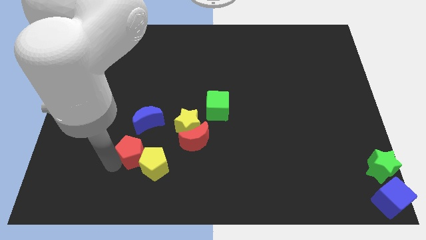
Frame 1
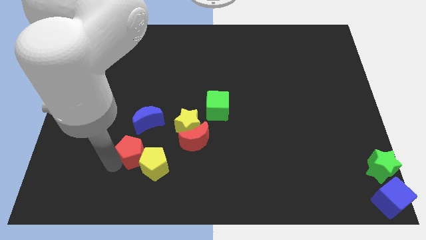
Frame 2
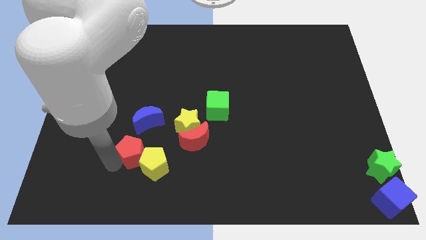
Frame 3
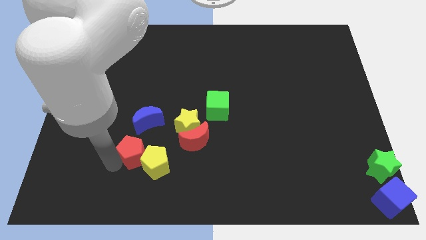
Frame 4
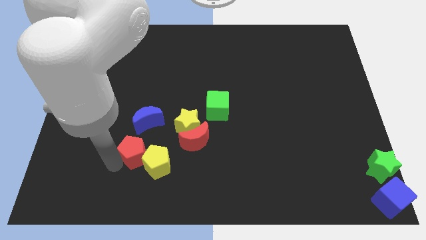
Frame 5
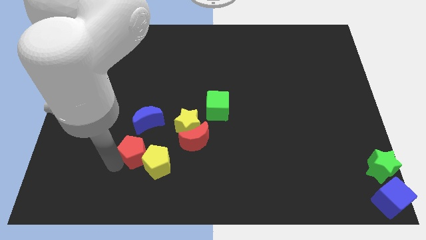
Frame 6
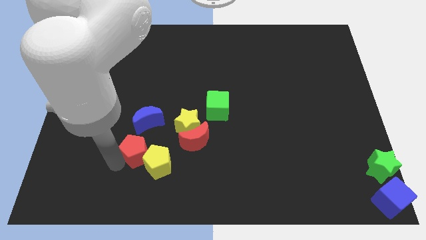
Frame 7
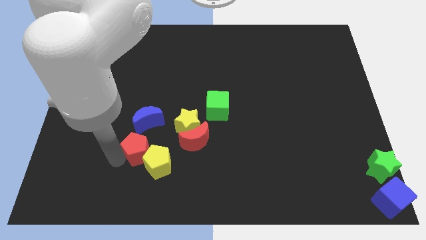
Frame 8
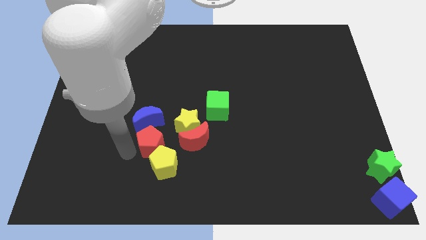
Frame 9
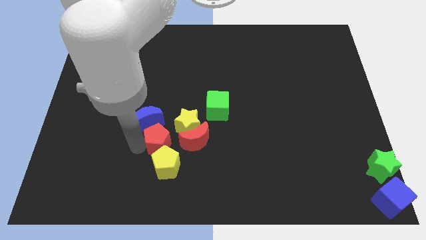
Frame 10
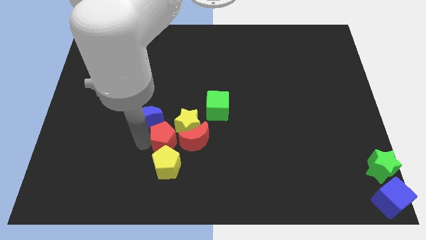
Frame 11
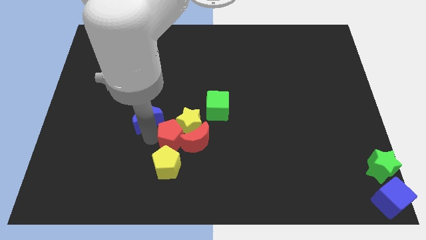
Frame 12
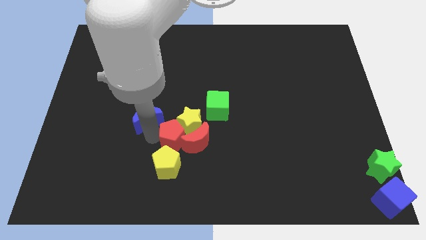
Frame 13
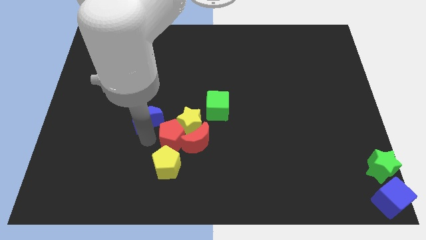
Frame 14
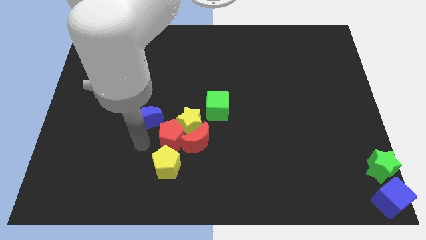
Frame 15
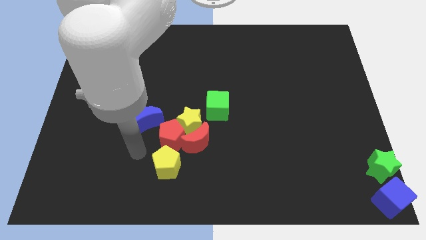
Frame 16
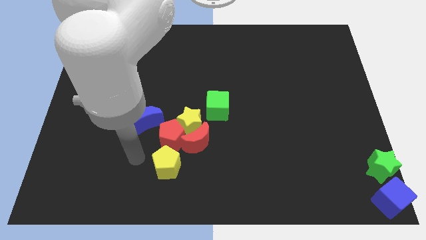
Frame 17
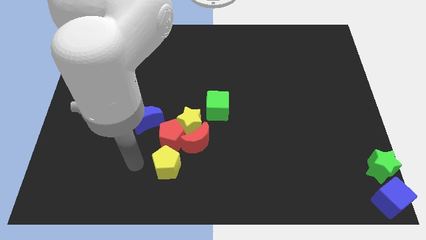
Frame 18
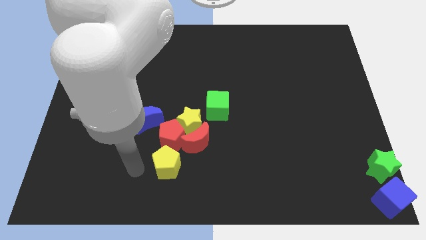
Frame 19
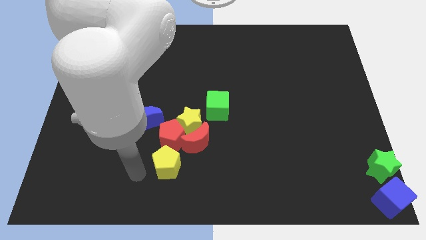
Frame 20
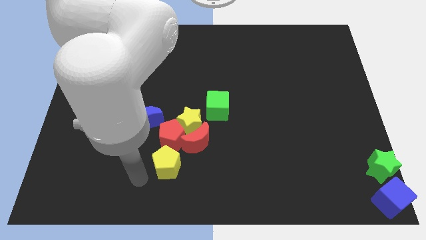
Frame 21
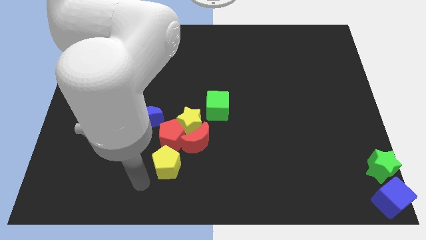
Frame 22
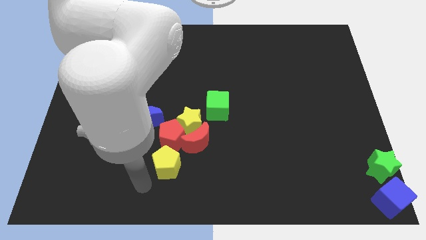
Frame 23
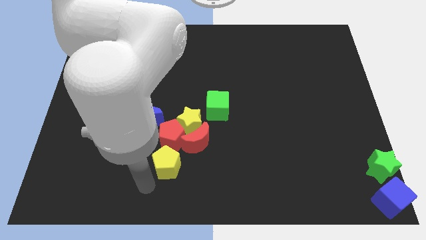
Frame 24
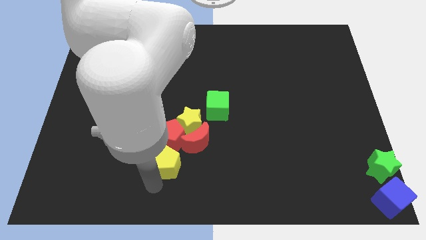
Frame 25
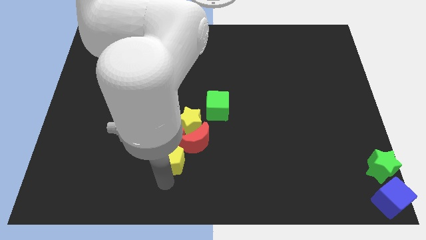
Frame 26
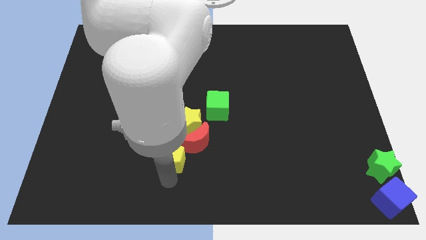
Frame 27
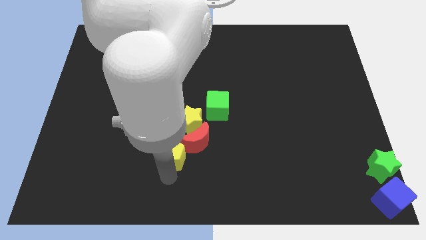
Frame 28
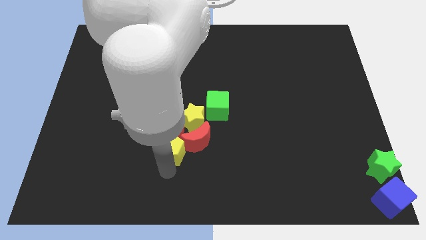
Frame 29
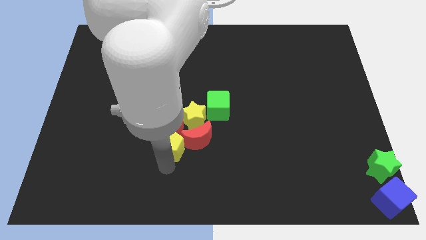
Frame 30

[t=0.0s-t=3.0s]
push the red and yellow pentagons into the yellow star and red crescent

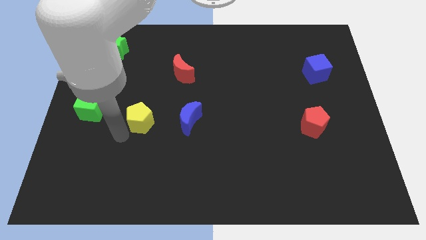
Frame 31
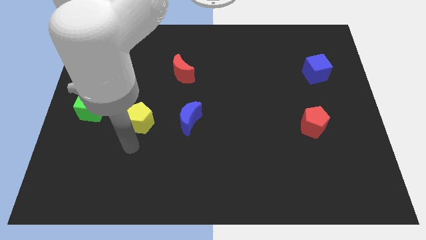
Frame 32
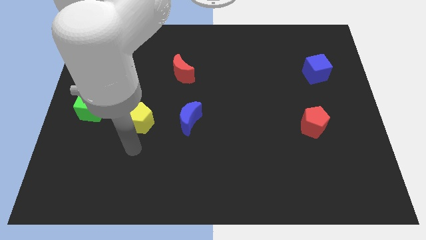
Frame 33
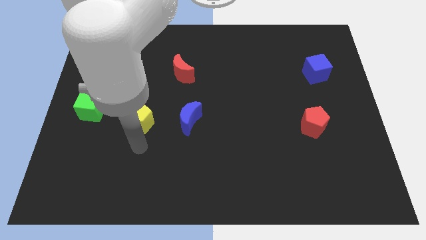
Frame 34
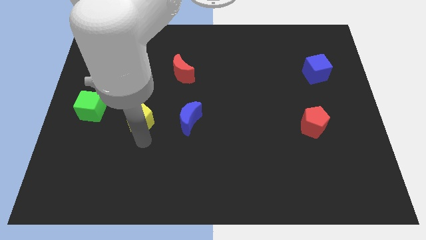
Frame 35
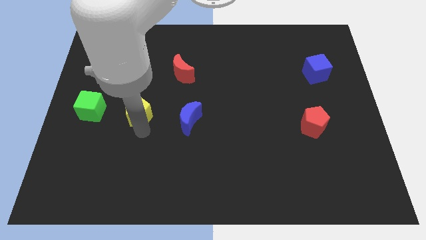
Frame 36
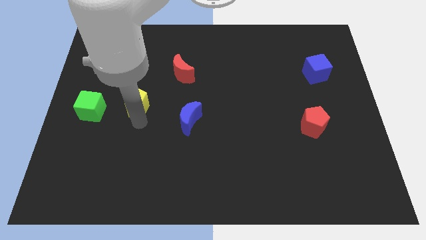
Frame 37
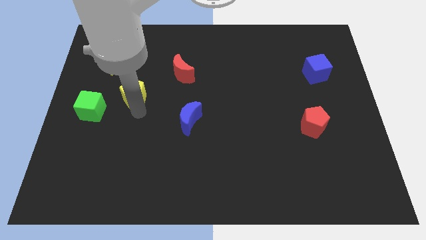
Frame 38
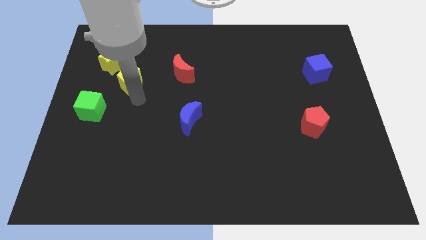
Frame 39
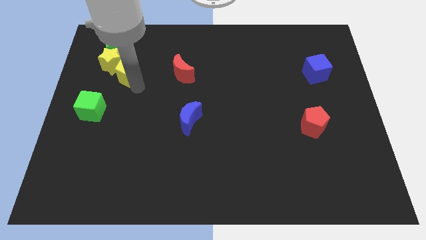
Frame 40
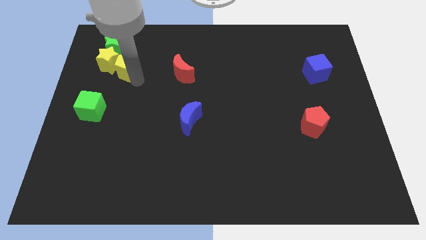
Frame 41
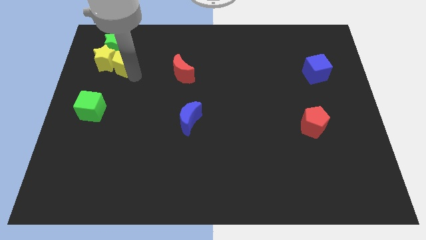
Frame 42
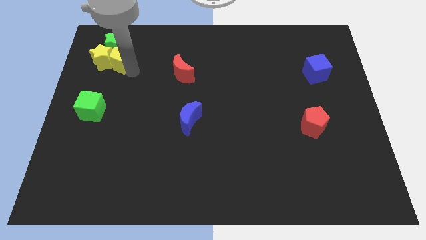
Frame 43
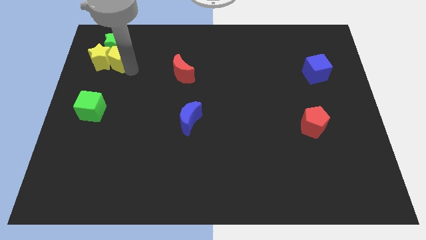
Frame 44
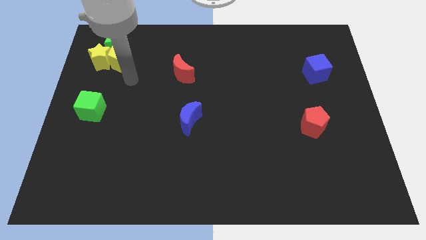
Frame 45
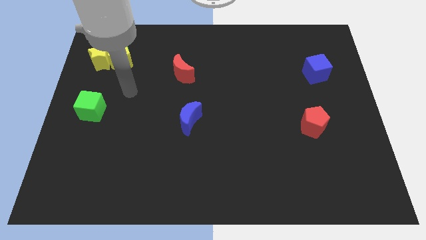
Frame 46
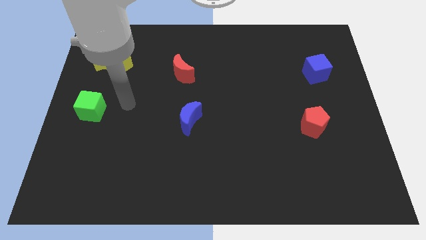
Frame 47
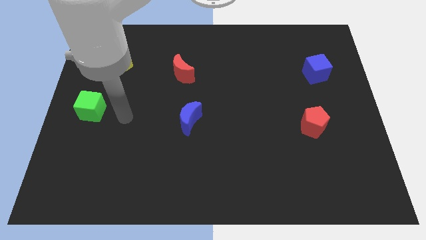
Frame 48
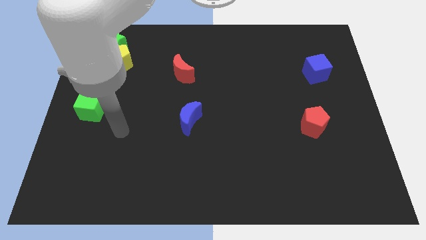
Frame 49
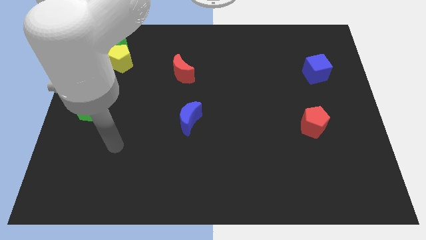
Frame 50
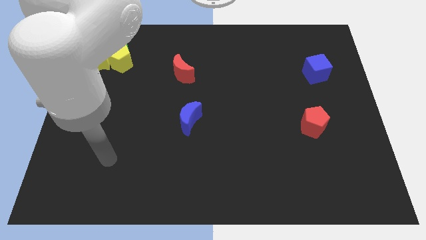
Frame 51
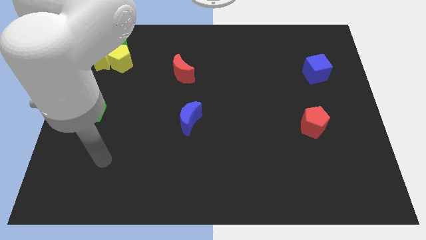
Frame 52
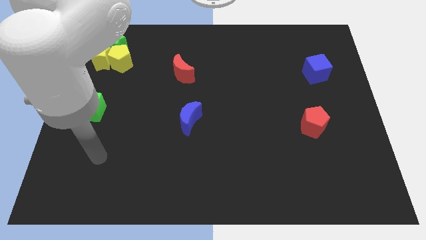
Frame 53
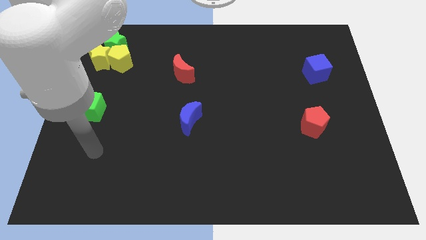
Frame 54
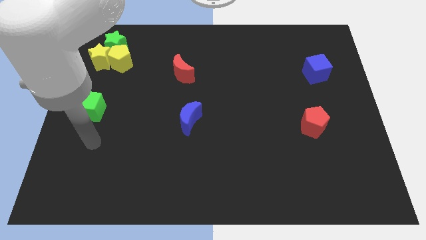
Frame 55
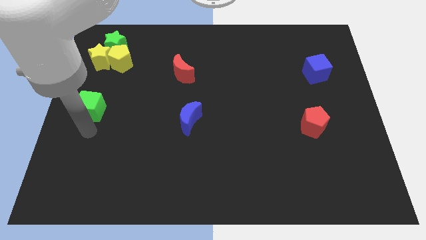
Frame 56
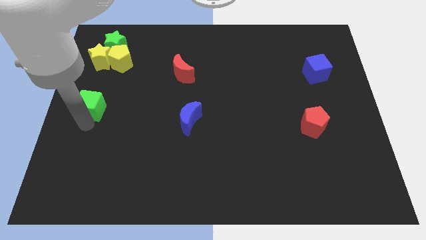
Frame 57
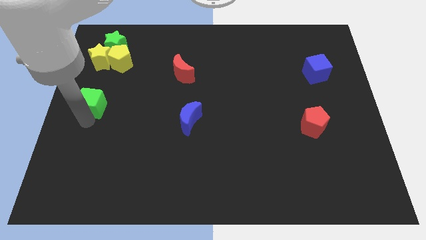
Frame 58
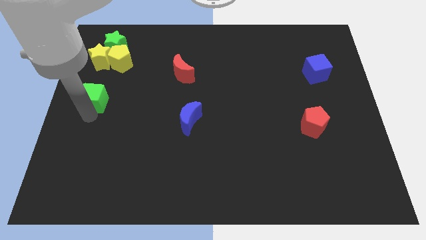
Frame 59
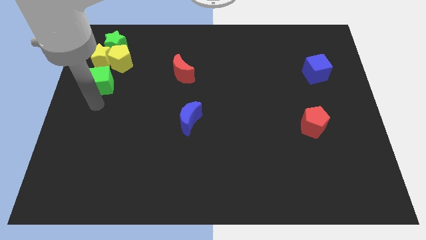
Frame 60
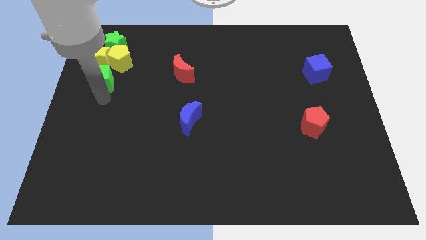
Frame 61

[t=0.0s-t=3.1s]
move yellow pentagon green cube to the group of blocks

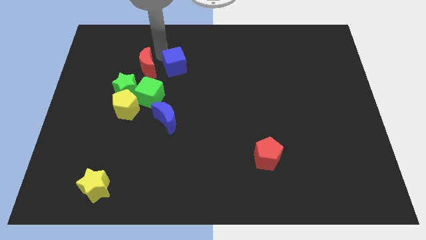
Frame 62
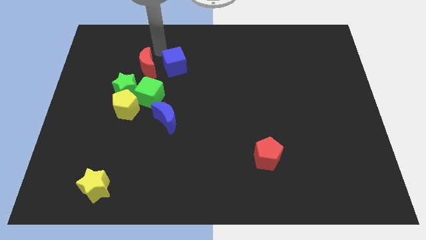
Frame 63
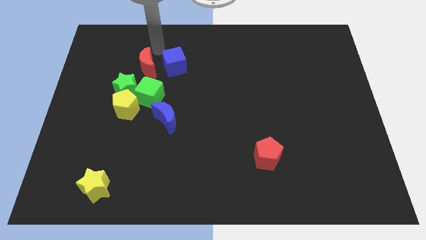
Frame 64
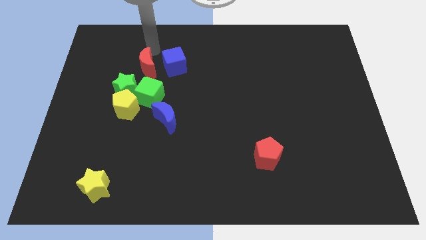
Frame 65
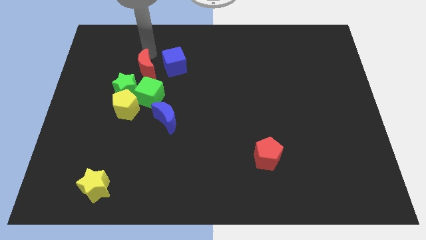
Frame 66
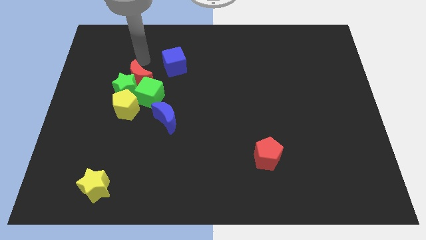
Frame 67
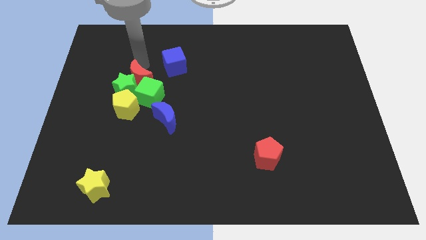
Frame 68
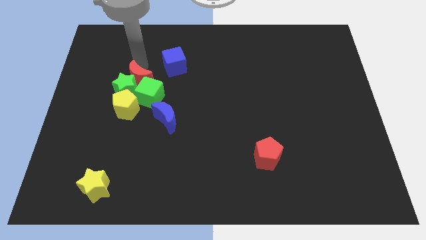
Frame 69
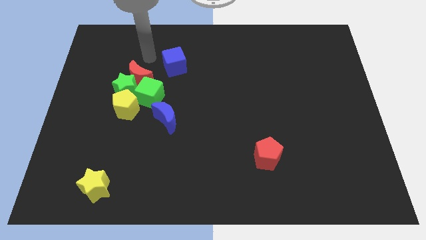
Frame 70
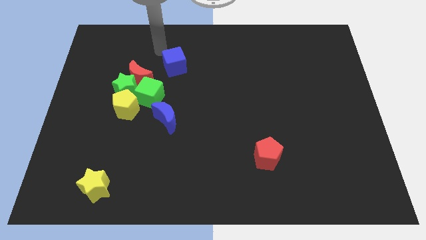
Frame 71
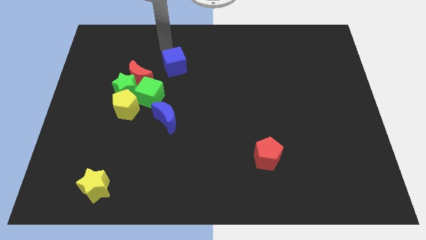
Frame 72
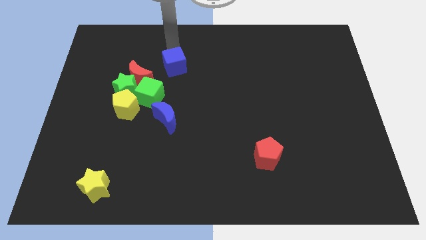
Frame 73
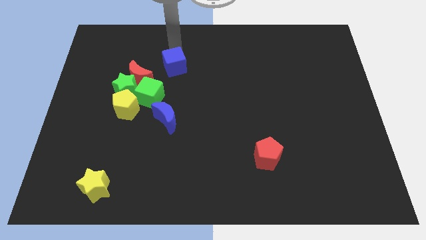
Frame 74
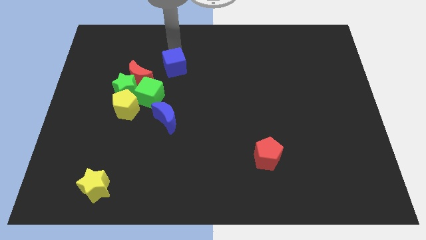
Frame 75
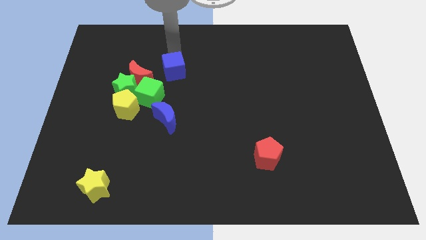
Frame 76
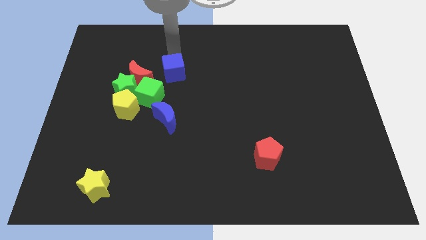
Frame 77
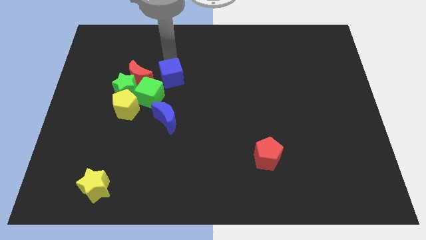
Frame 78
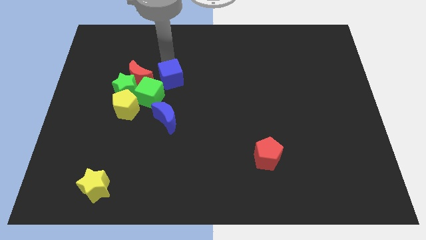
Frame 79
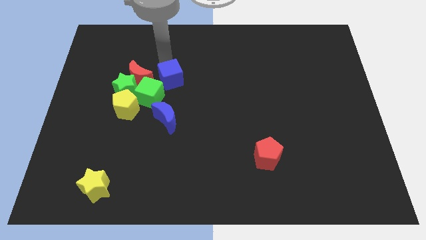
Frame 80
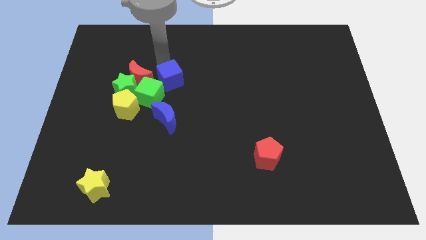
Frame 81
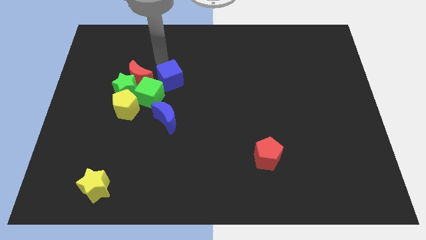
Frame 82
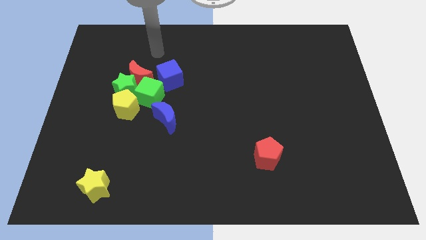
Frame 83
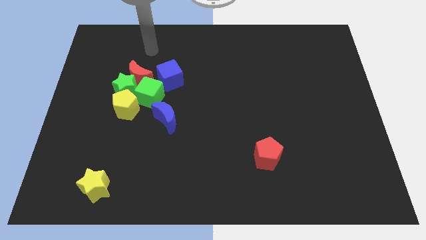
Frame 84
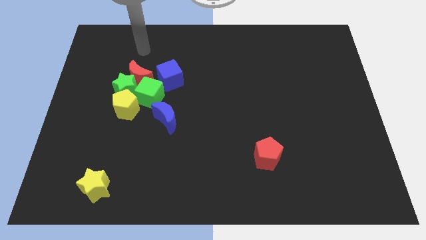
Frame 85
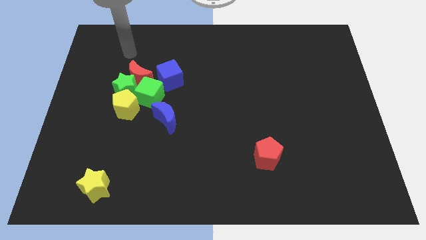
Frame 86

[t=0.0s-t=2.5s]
move the red crescent into the green star

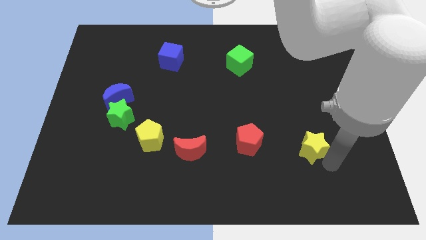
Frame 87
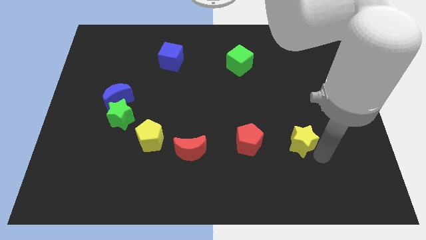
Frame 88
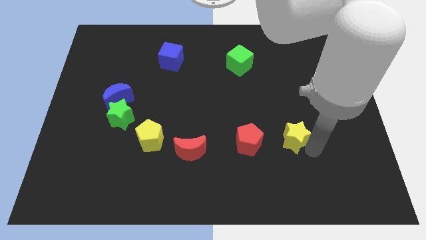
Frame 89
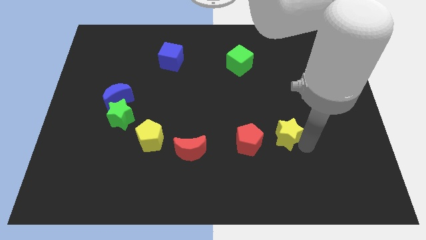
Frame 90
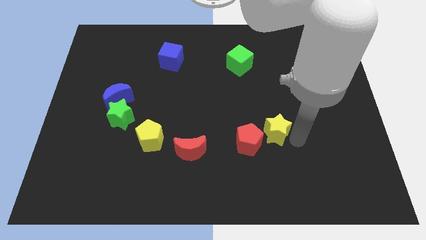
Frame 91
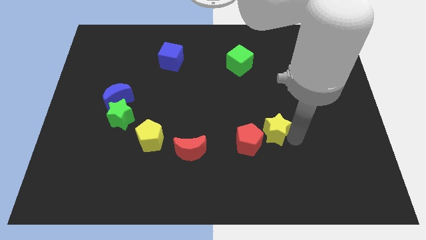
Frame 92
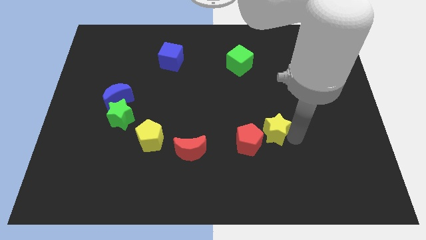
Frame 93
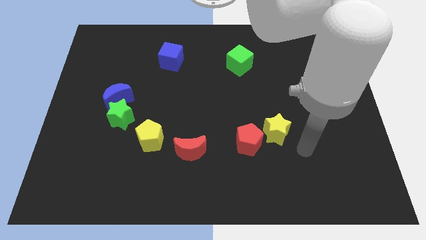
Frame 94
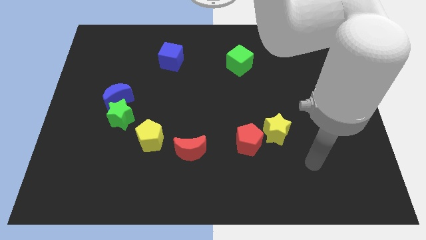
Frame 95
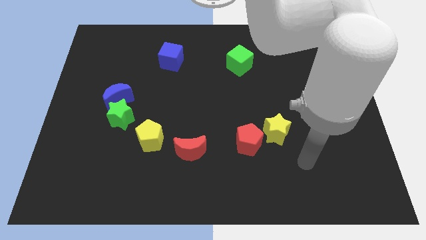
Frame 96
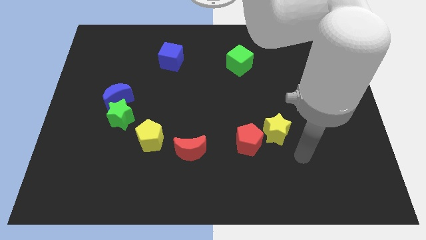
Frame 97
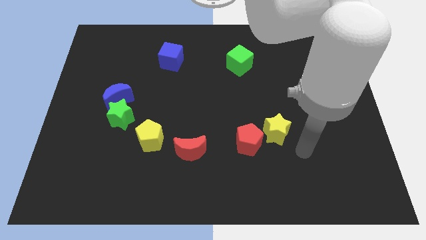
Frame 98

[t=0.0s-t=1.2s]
place the yellow star close to the red pentagon
